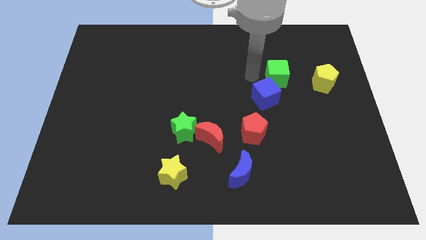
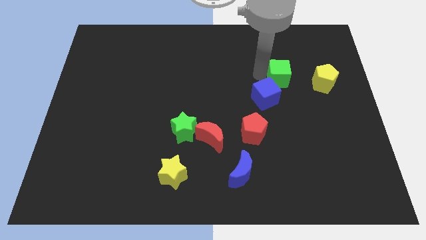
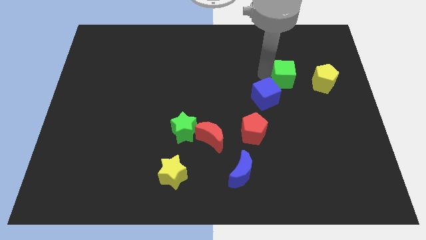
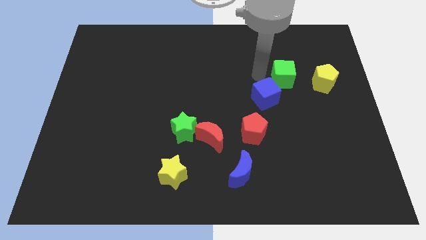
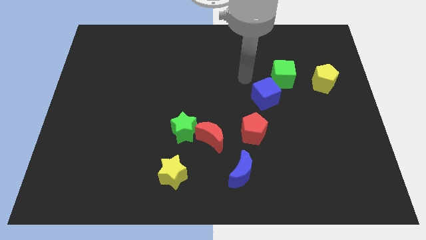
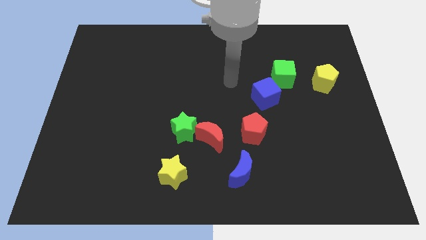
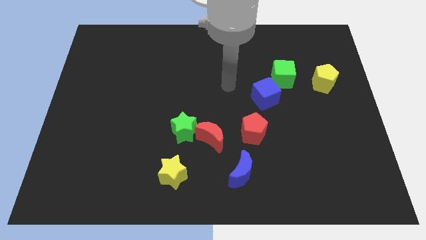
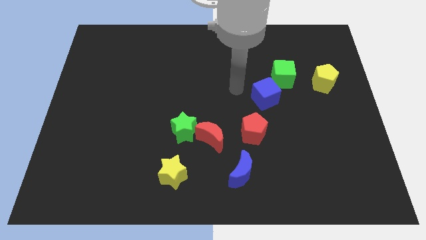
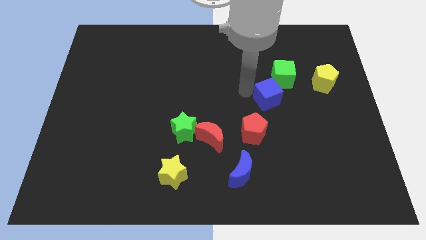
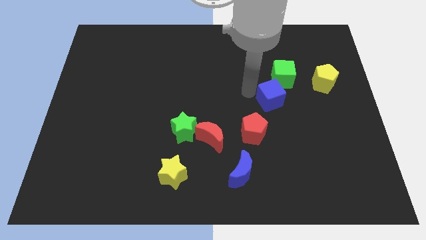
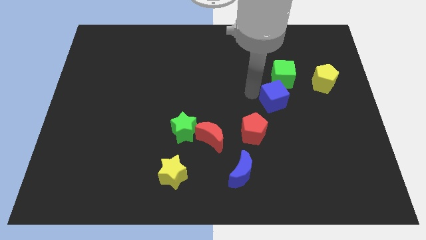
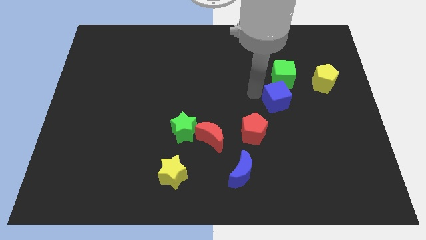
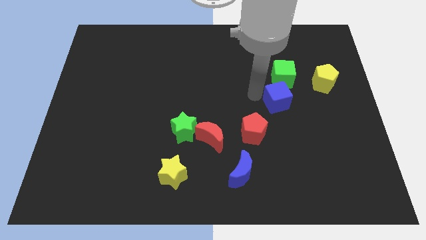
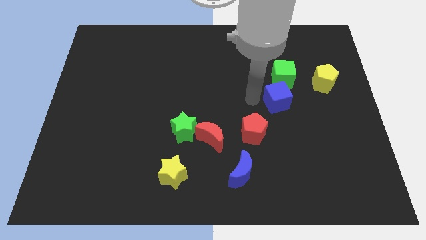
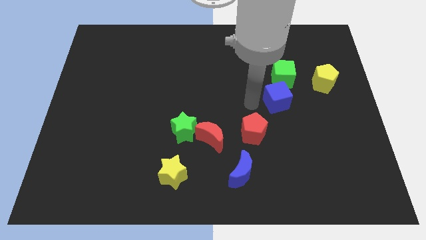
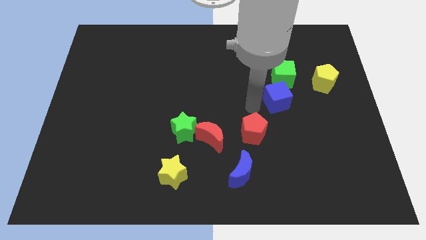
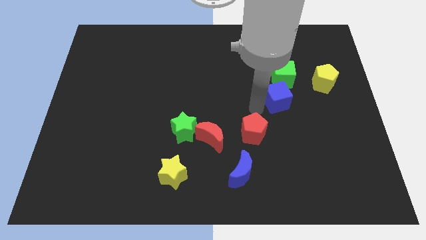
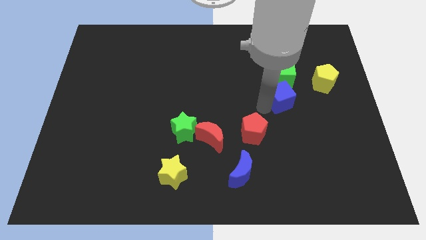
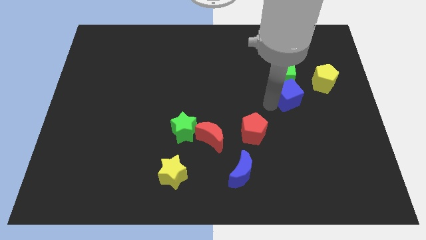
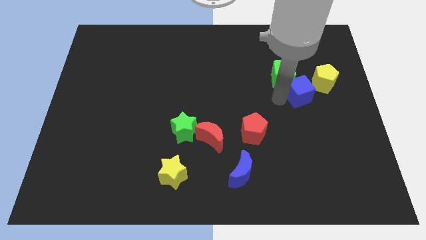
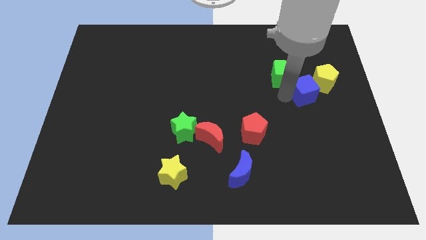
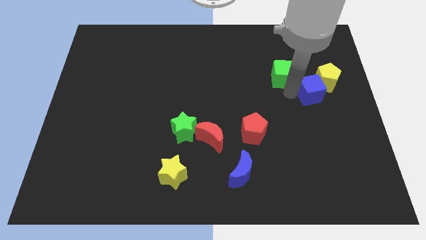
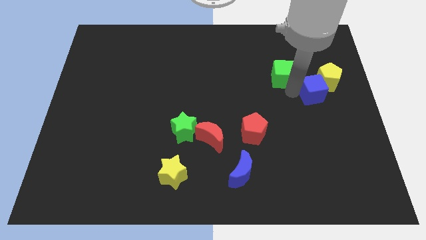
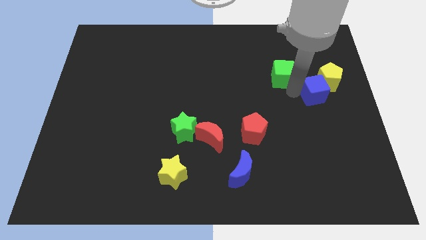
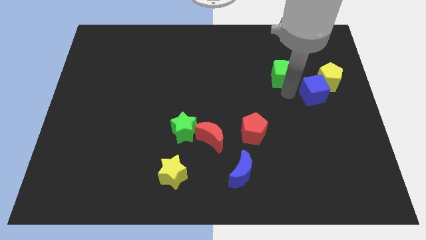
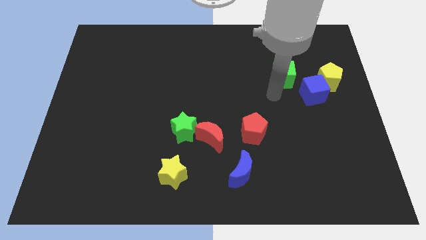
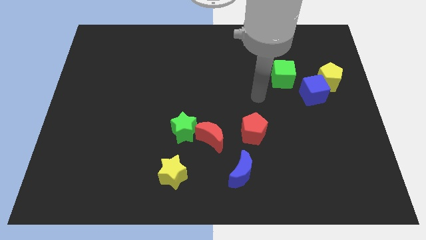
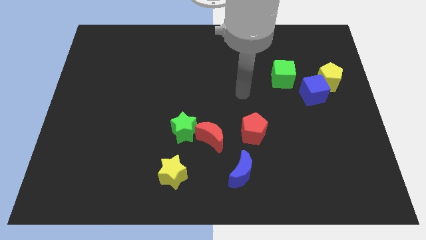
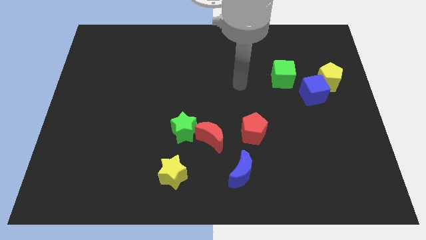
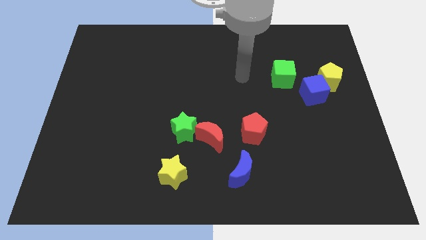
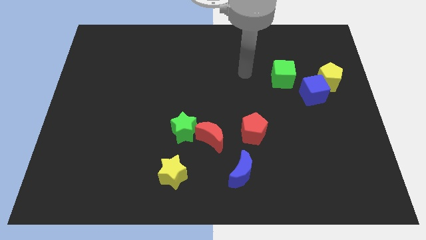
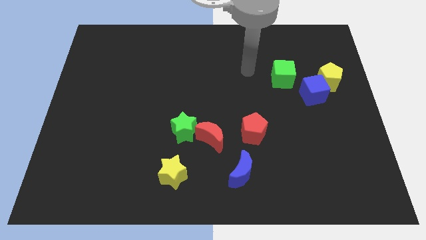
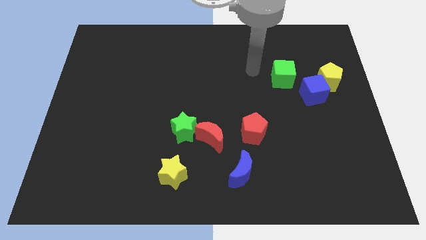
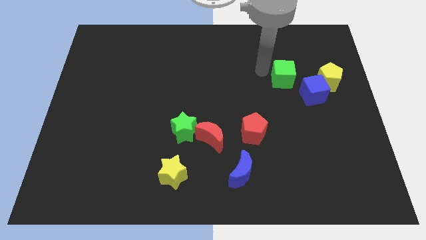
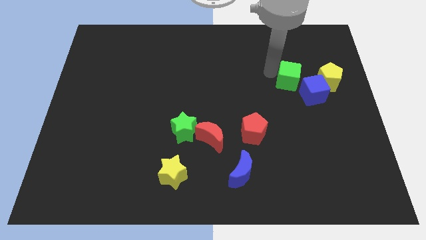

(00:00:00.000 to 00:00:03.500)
move blue cube in between green cube and yellow pentagon

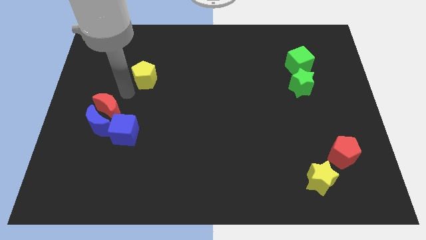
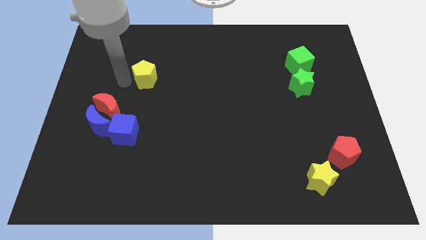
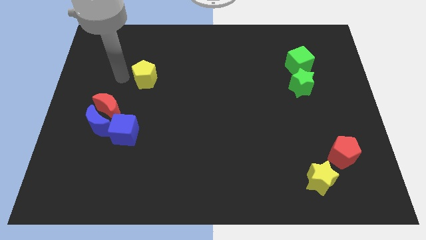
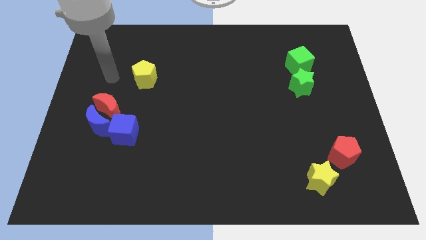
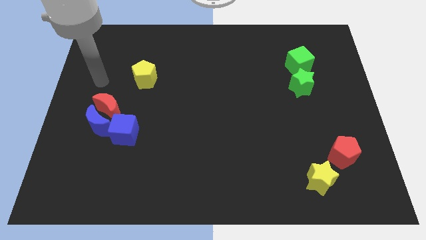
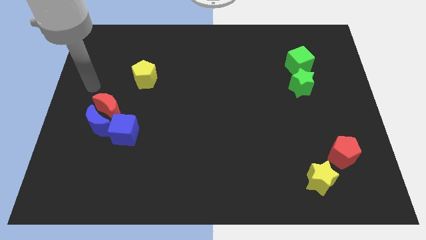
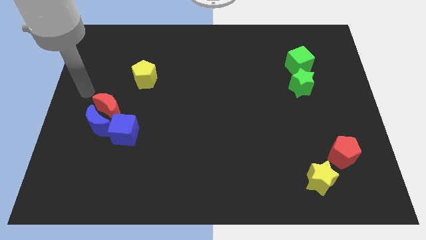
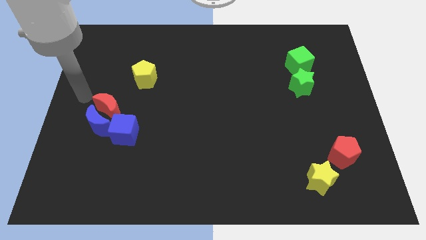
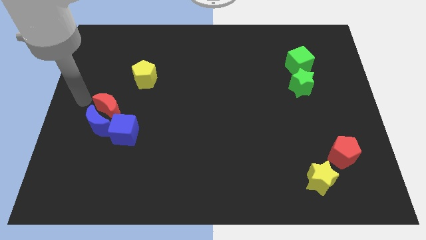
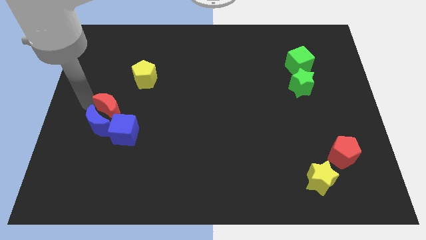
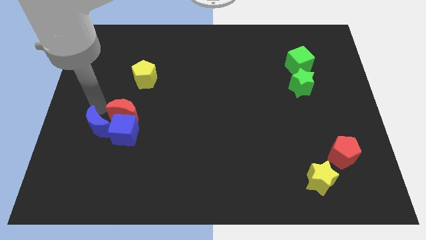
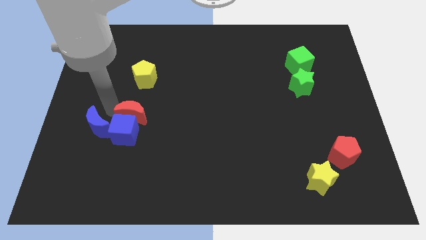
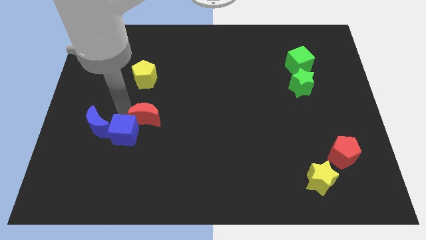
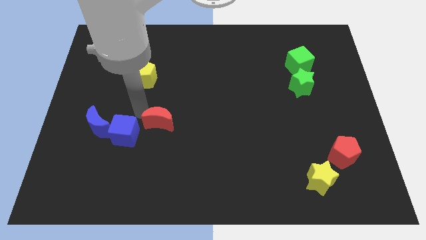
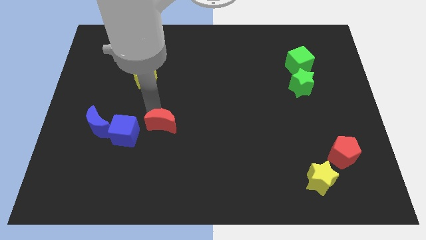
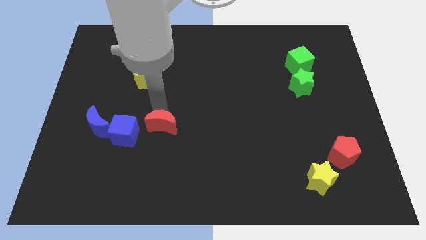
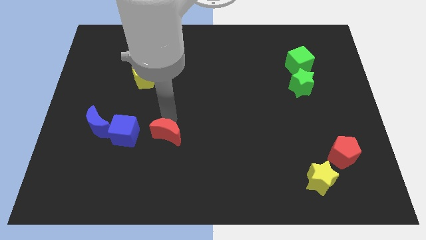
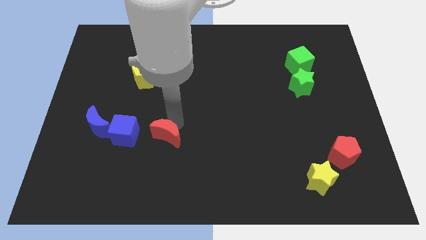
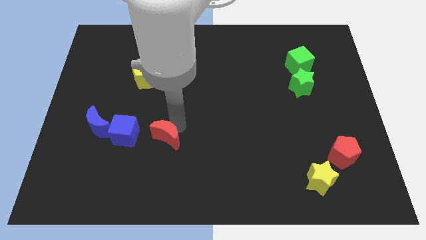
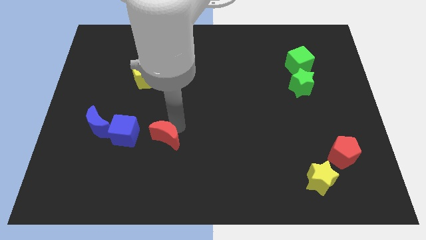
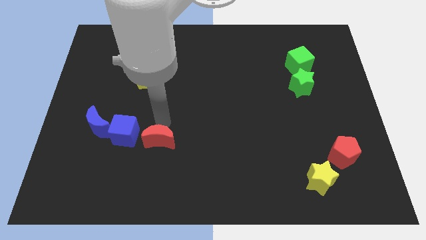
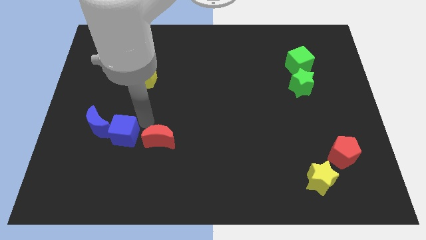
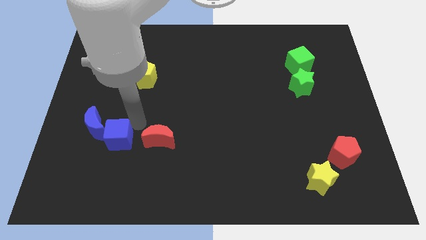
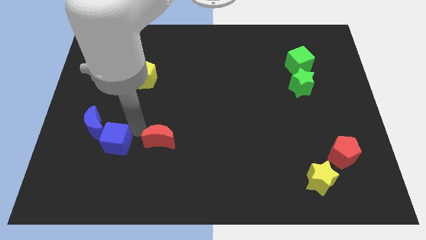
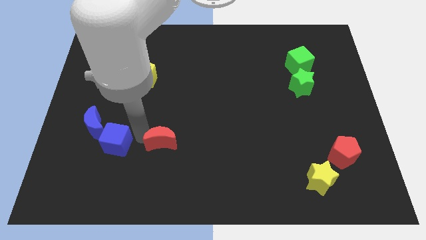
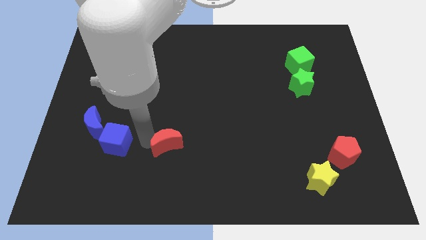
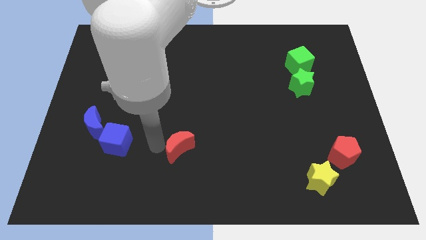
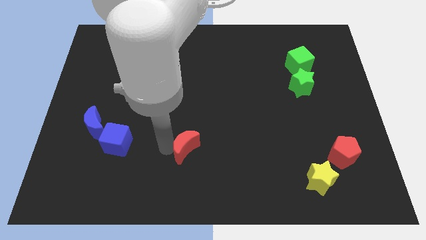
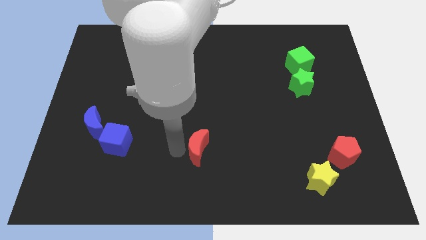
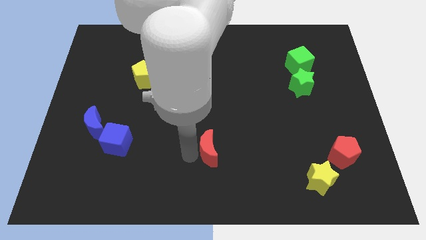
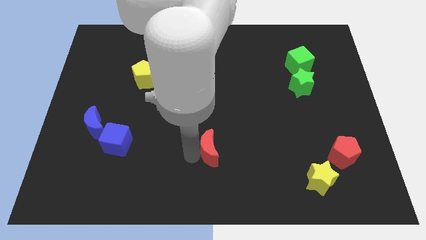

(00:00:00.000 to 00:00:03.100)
separate red crescent from blue blocks

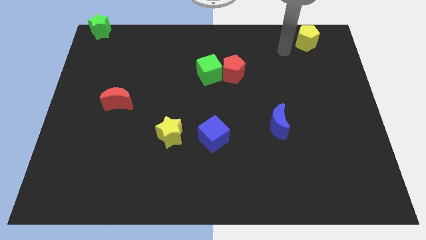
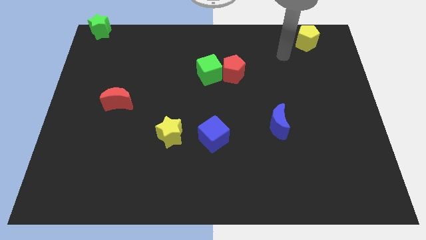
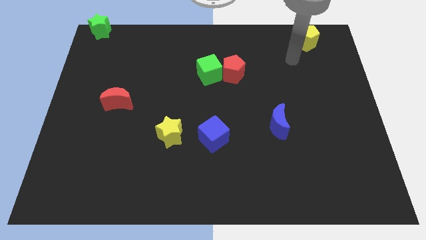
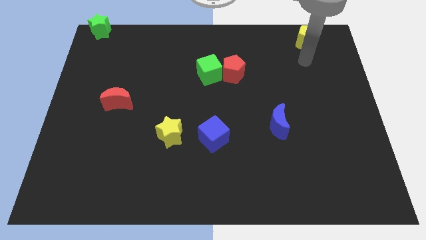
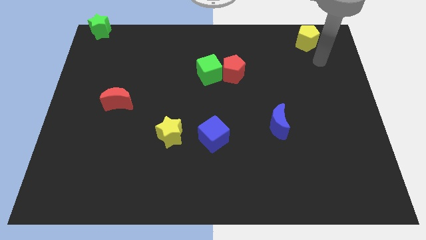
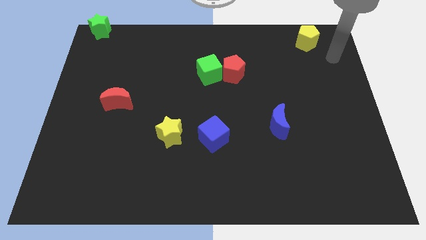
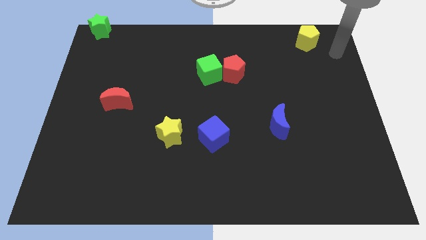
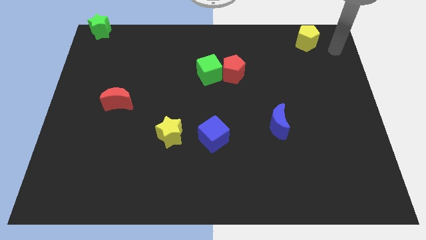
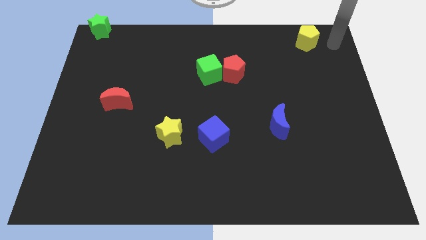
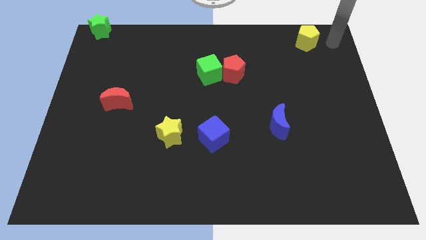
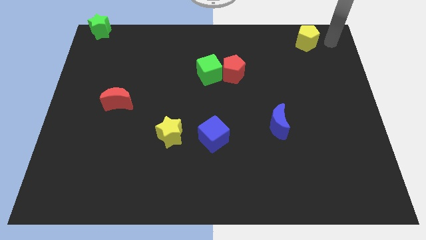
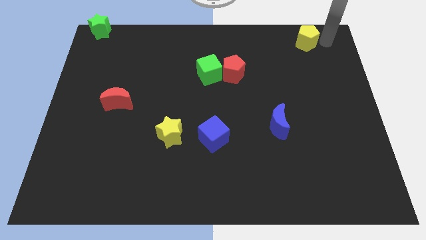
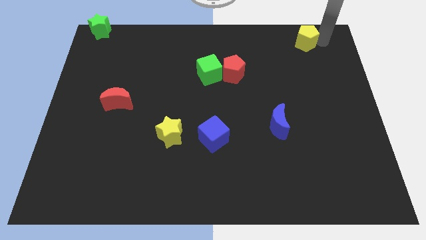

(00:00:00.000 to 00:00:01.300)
move yellow pentagon at top right

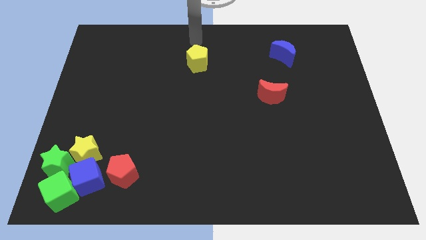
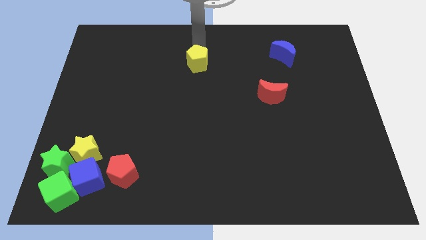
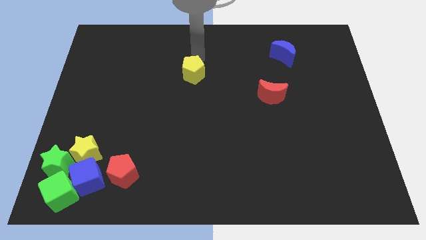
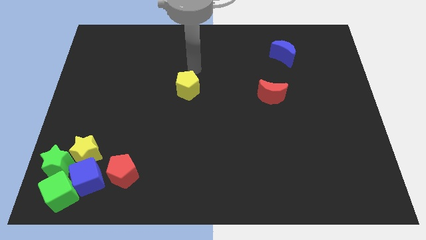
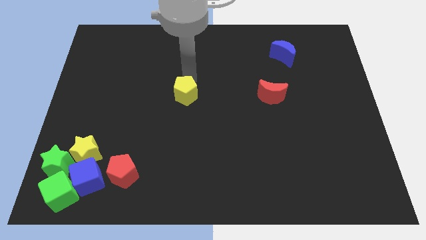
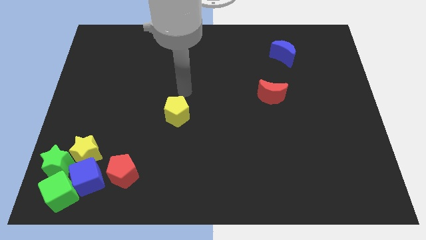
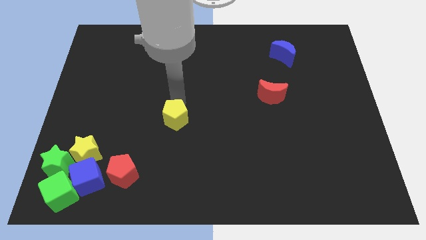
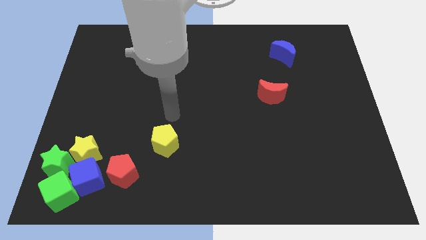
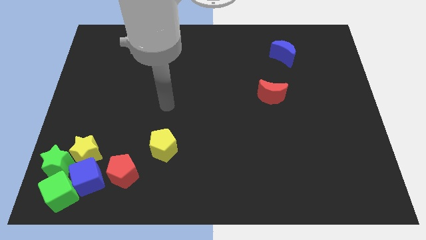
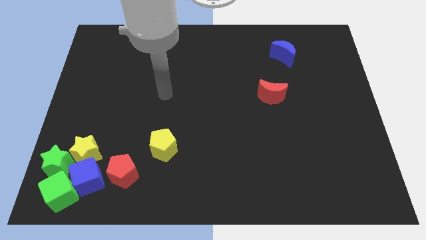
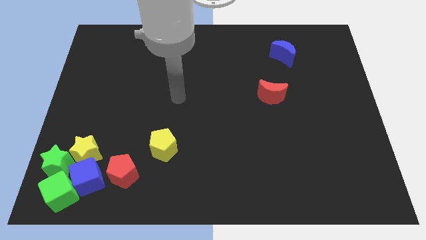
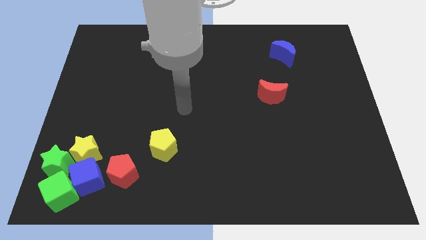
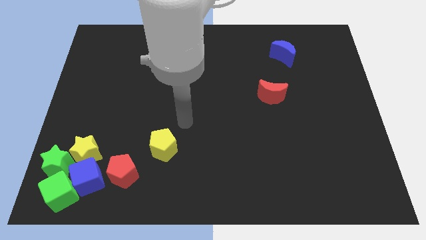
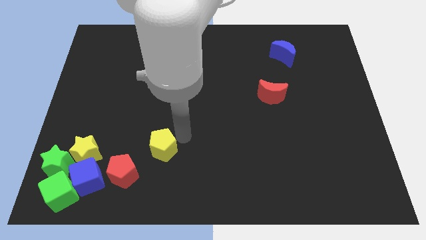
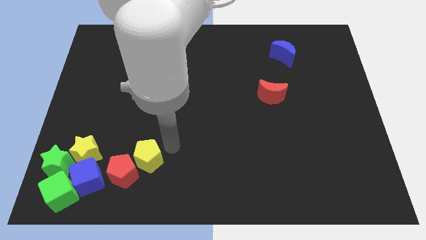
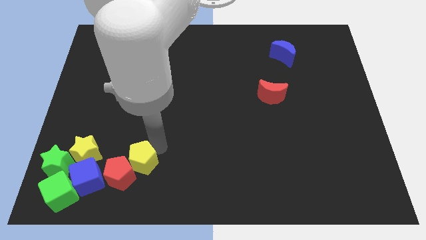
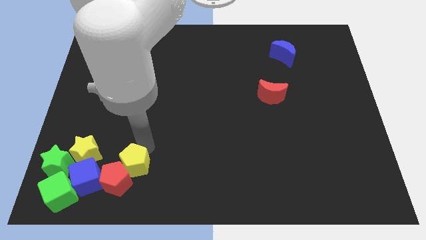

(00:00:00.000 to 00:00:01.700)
place the yellow pentagon towards the top right diagonal to the red pentagon
